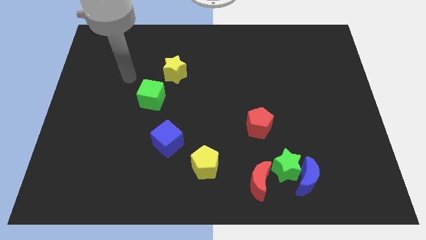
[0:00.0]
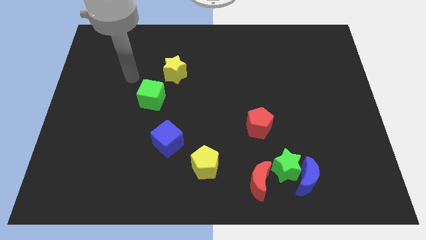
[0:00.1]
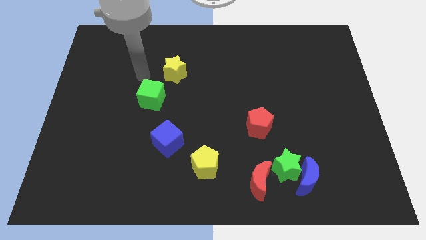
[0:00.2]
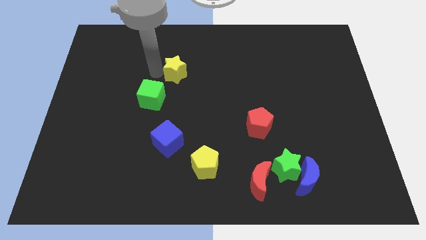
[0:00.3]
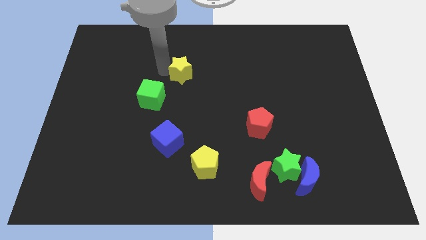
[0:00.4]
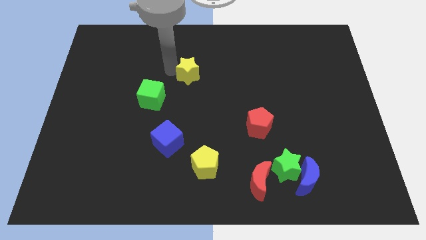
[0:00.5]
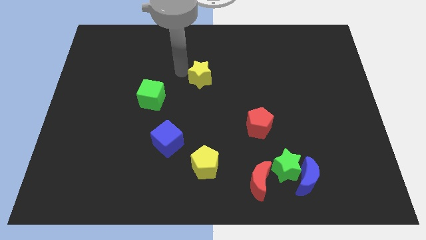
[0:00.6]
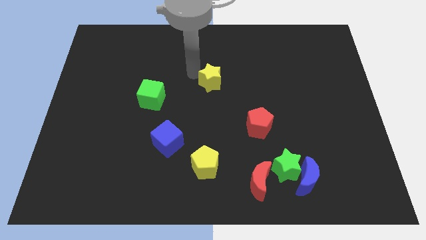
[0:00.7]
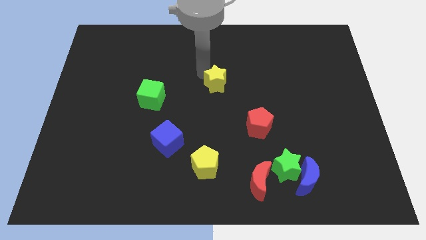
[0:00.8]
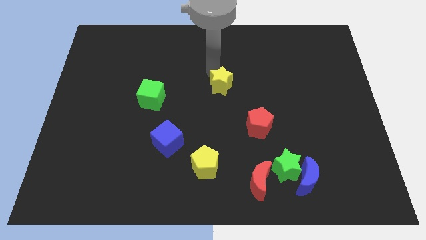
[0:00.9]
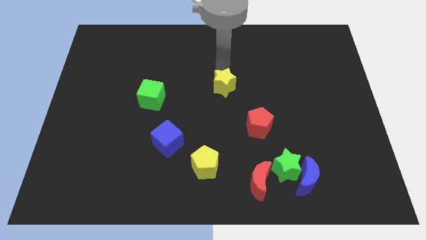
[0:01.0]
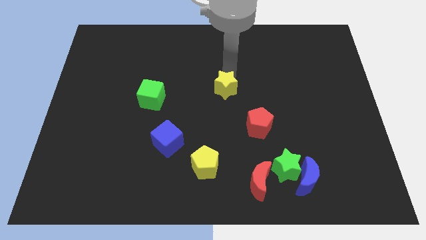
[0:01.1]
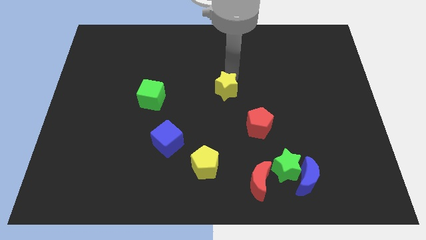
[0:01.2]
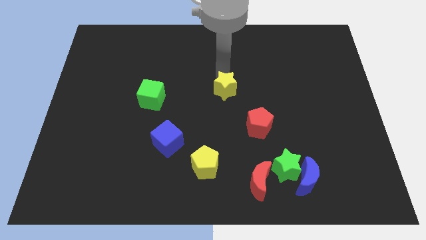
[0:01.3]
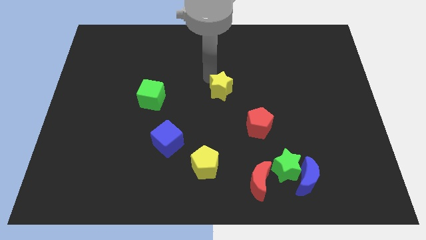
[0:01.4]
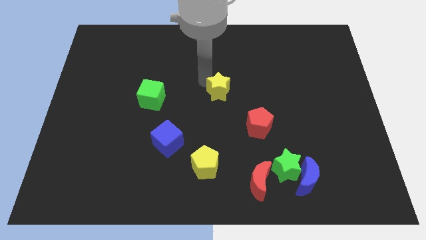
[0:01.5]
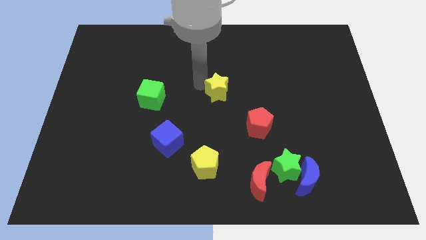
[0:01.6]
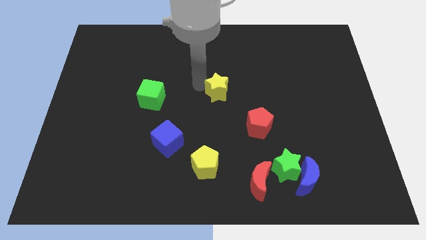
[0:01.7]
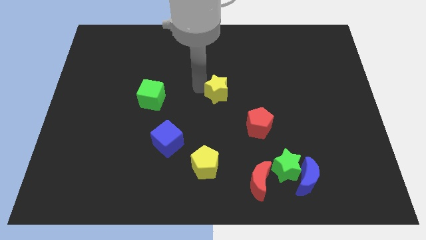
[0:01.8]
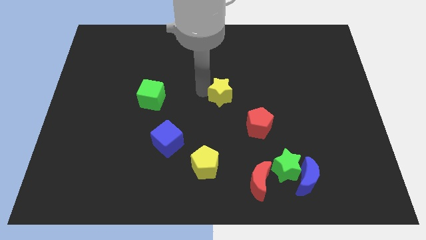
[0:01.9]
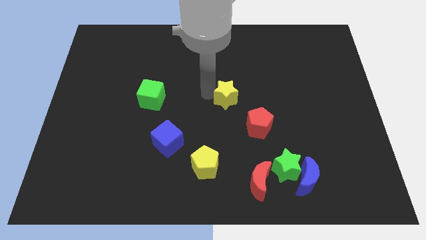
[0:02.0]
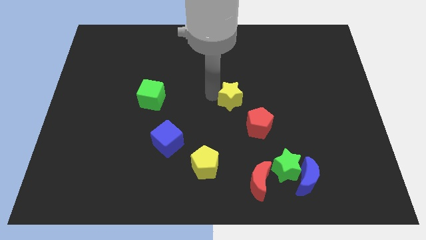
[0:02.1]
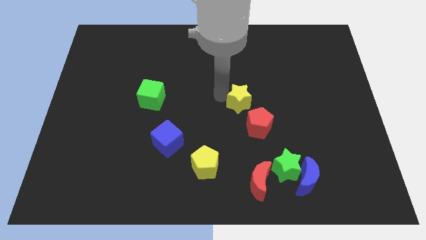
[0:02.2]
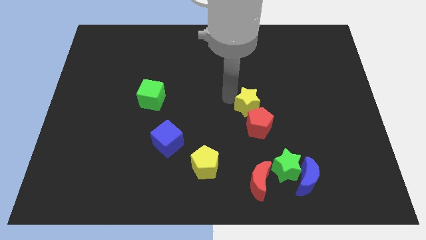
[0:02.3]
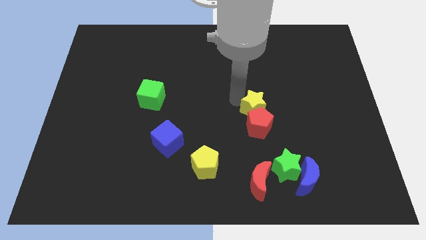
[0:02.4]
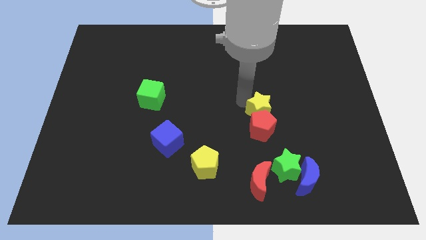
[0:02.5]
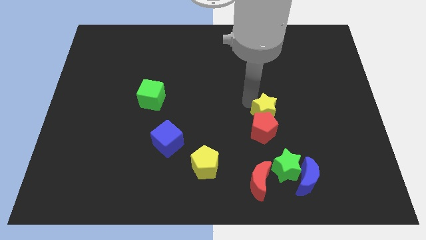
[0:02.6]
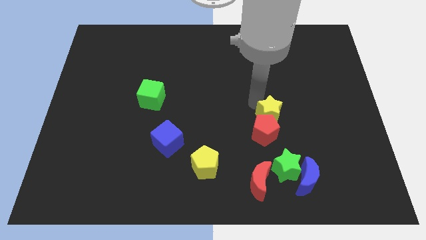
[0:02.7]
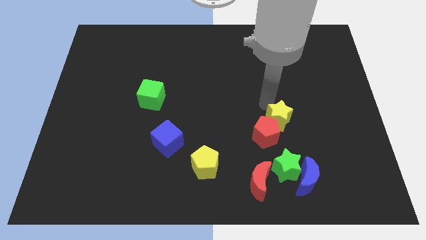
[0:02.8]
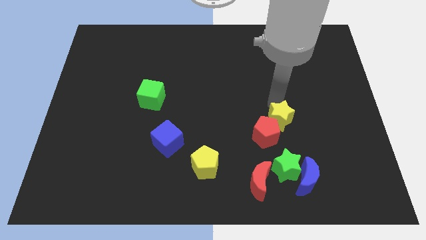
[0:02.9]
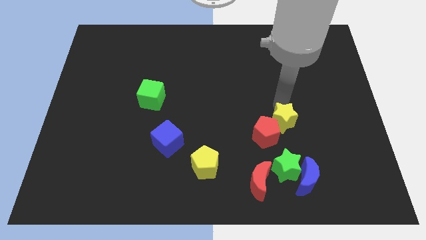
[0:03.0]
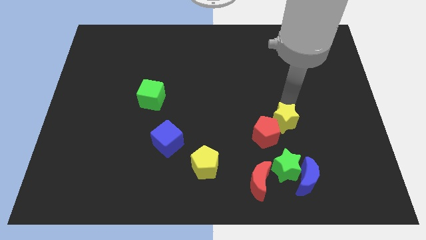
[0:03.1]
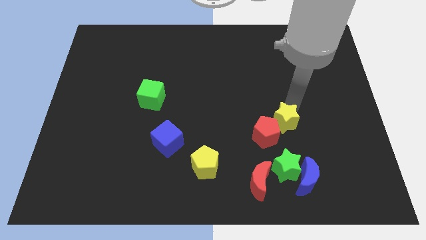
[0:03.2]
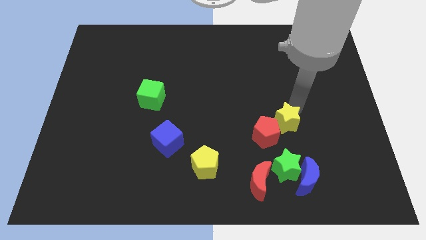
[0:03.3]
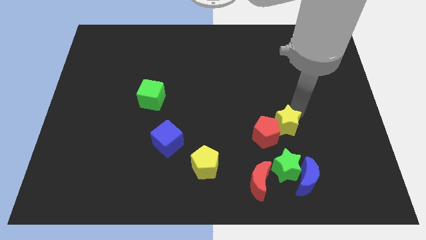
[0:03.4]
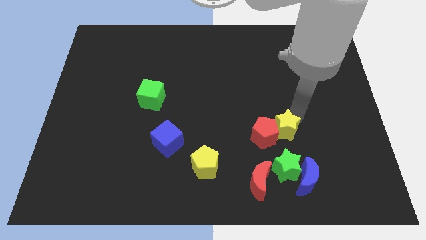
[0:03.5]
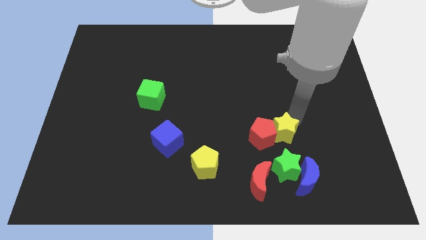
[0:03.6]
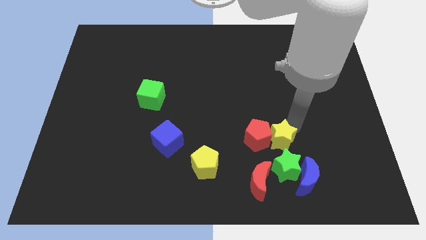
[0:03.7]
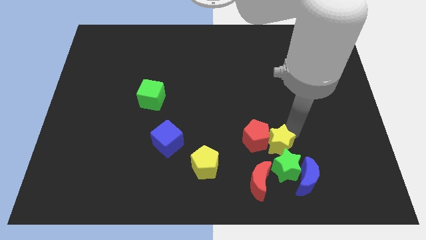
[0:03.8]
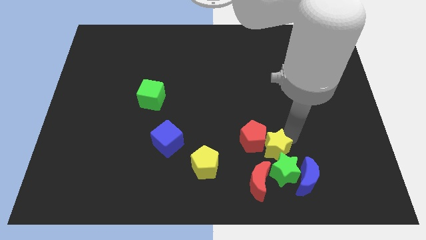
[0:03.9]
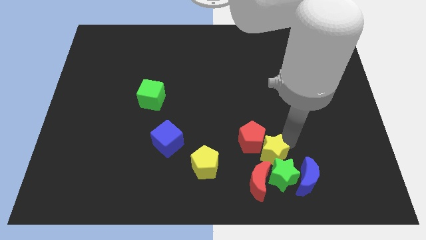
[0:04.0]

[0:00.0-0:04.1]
push the yellow star next to the green star

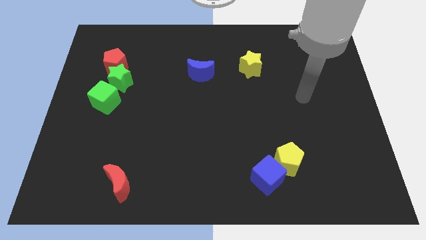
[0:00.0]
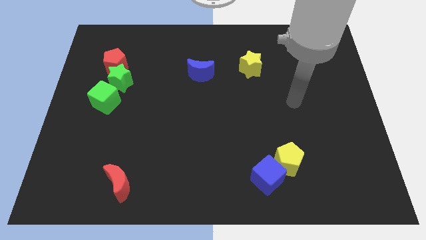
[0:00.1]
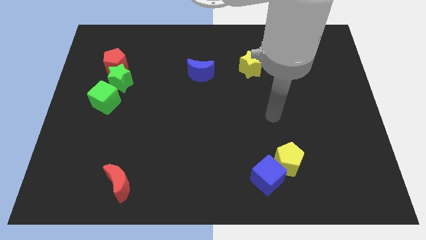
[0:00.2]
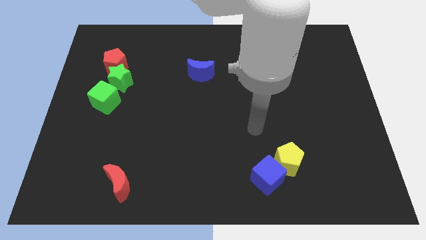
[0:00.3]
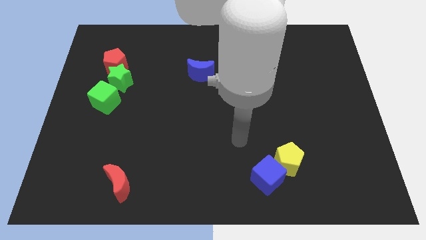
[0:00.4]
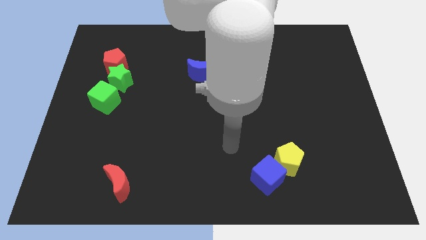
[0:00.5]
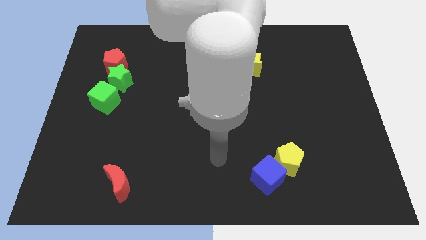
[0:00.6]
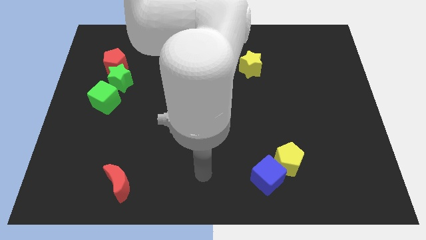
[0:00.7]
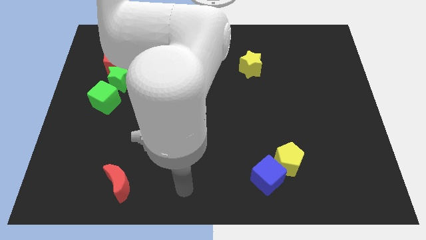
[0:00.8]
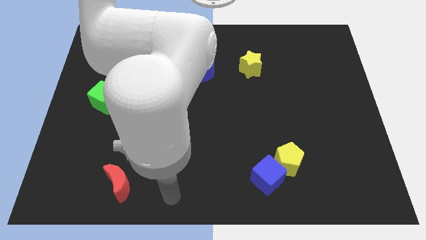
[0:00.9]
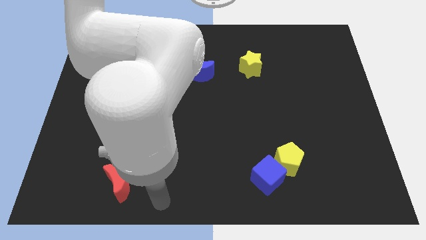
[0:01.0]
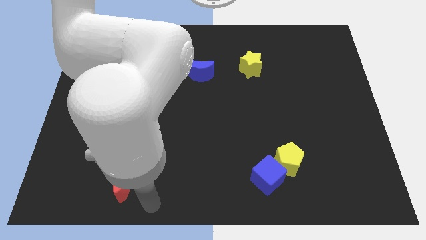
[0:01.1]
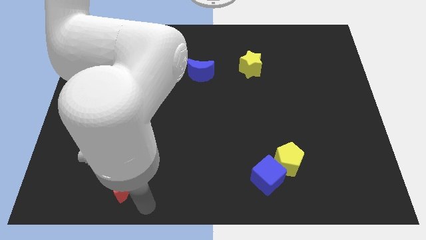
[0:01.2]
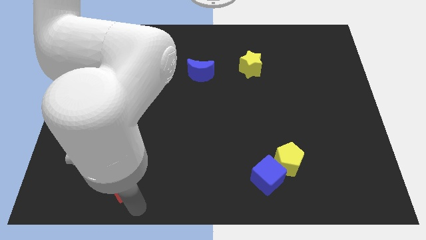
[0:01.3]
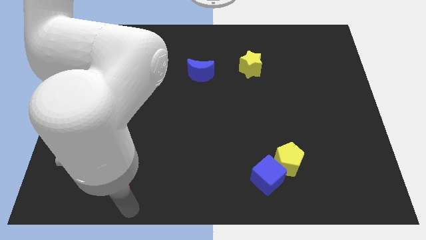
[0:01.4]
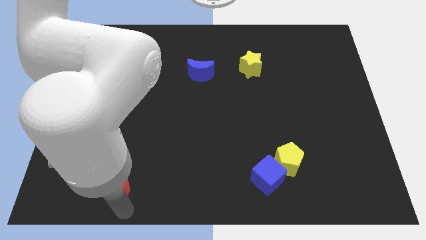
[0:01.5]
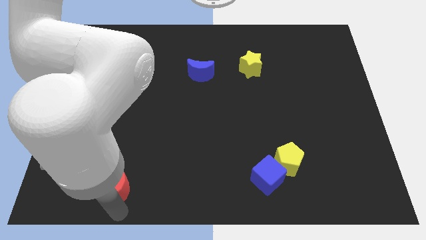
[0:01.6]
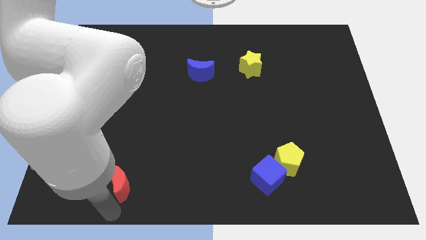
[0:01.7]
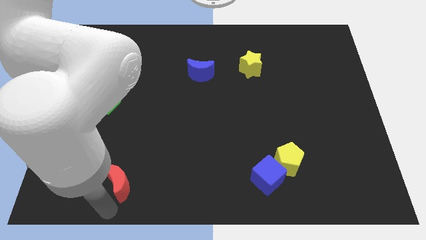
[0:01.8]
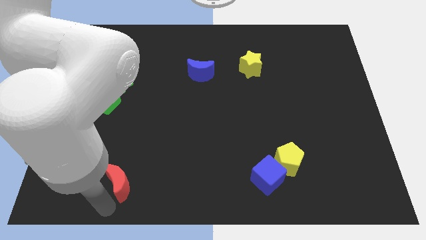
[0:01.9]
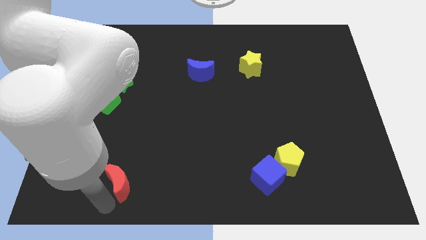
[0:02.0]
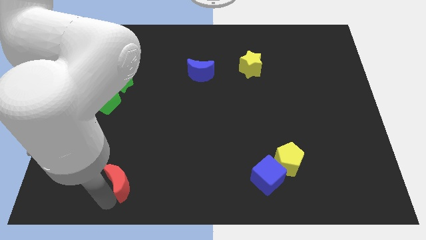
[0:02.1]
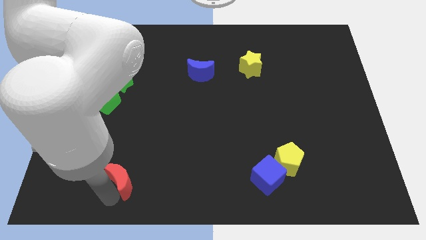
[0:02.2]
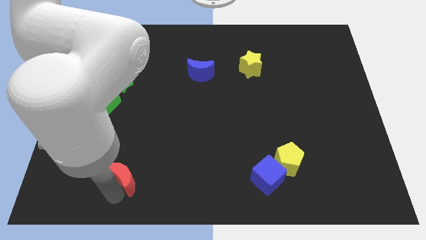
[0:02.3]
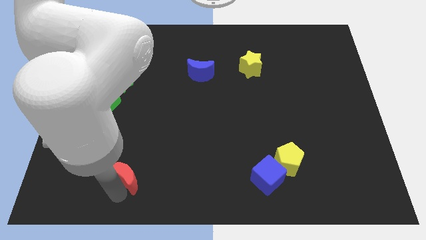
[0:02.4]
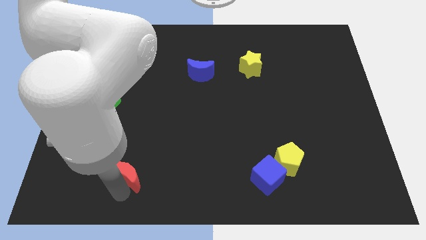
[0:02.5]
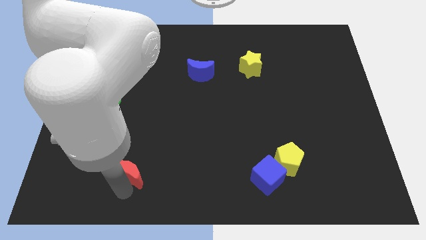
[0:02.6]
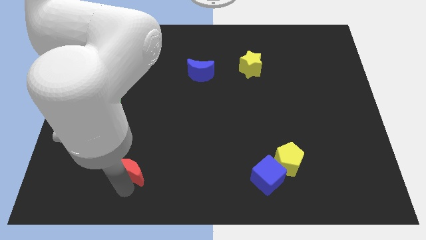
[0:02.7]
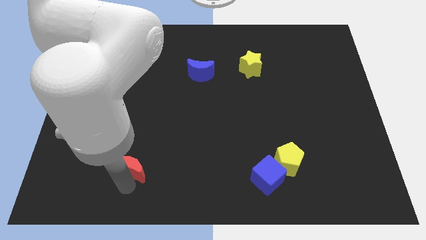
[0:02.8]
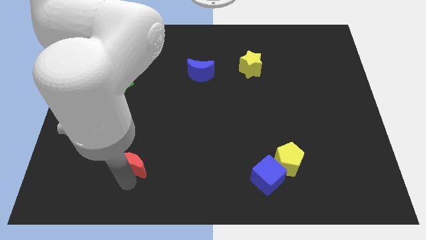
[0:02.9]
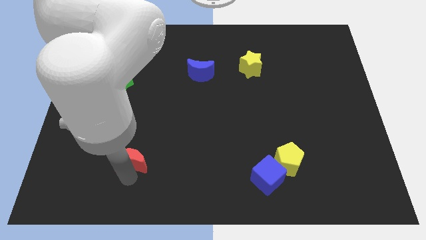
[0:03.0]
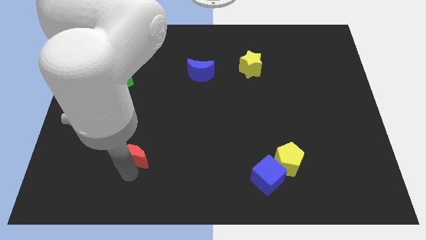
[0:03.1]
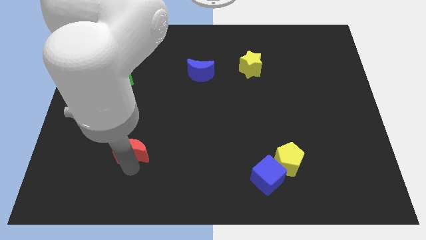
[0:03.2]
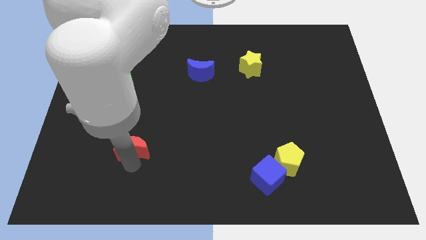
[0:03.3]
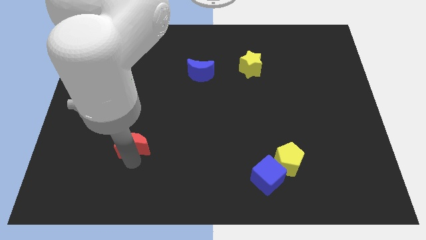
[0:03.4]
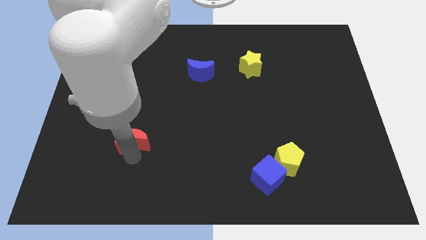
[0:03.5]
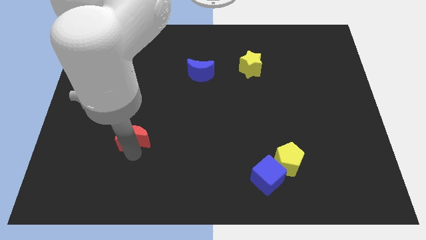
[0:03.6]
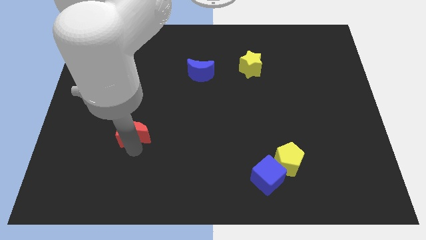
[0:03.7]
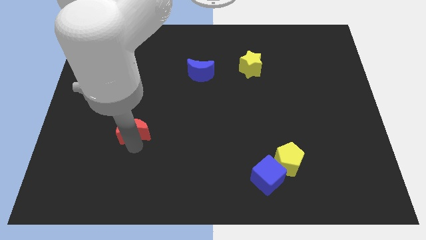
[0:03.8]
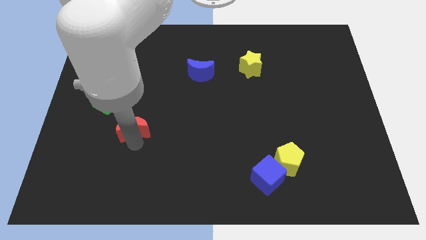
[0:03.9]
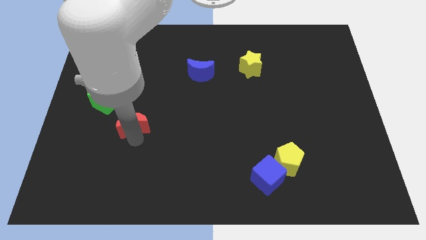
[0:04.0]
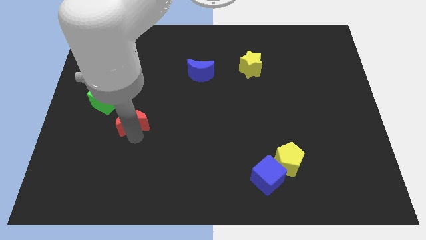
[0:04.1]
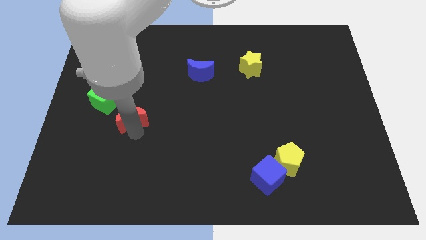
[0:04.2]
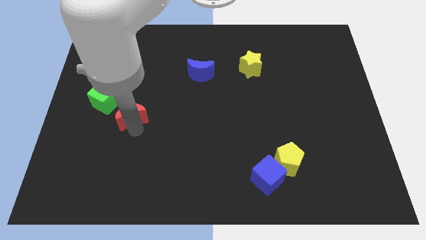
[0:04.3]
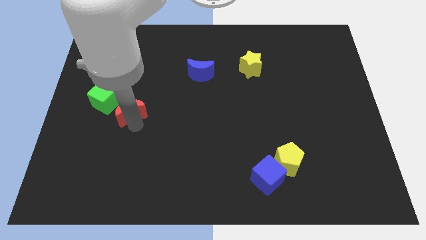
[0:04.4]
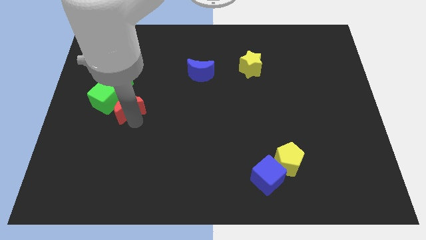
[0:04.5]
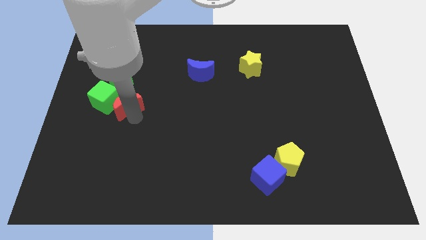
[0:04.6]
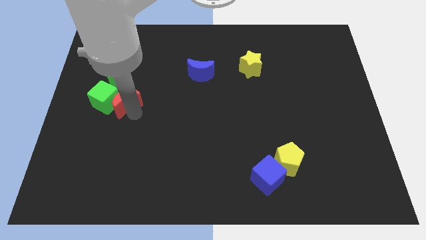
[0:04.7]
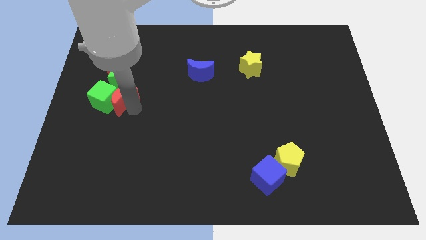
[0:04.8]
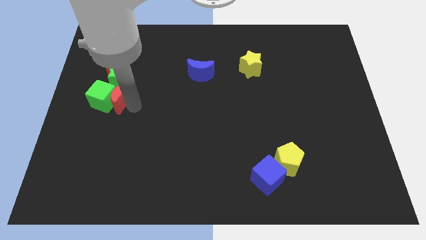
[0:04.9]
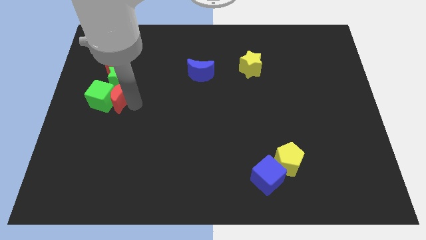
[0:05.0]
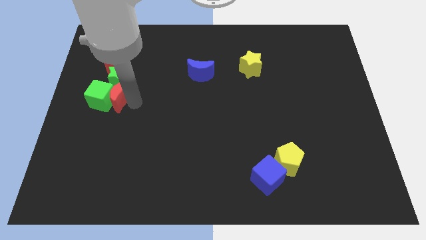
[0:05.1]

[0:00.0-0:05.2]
move the red moon next to the green star
